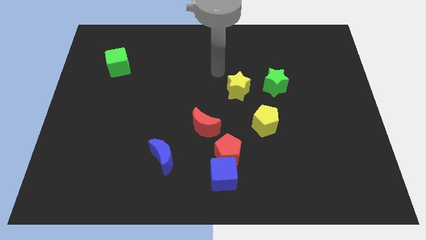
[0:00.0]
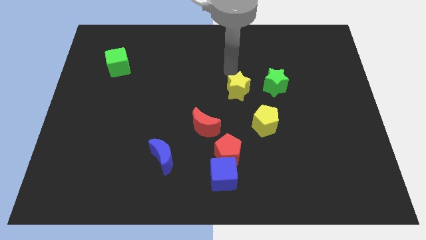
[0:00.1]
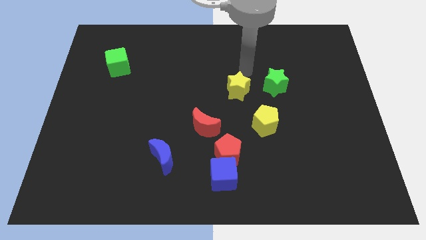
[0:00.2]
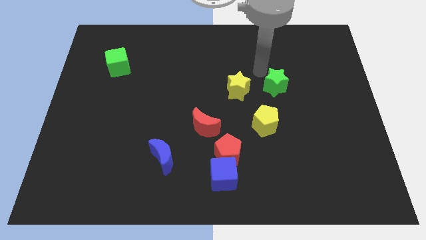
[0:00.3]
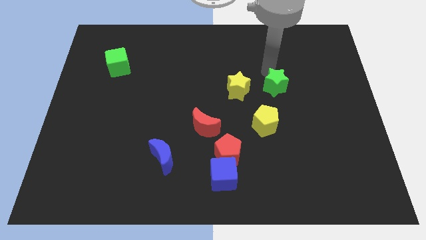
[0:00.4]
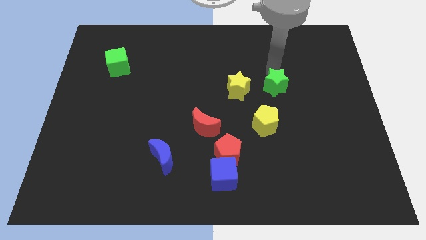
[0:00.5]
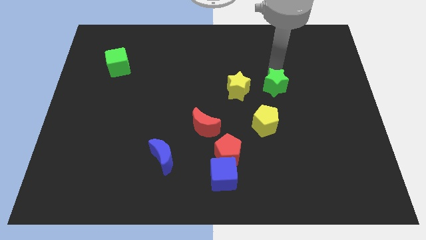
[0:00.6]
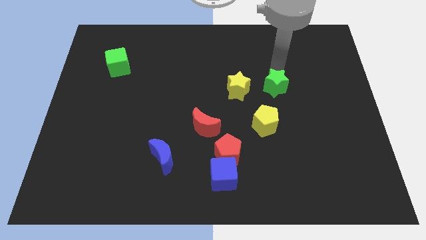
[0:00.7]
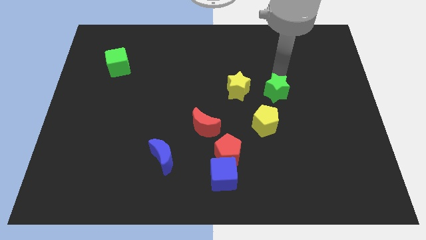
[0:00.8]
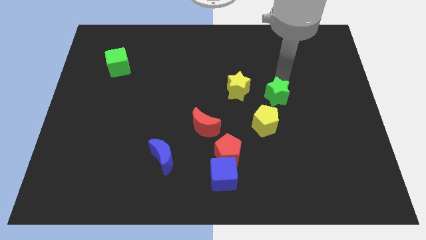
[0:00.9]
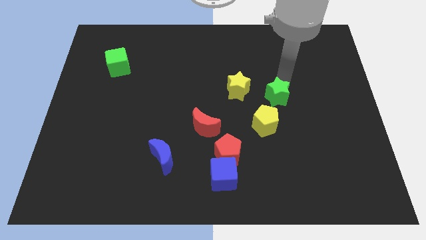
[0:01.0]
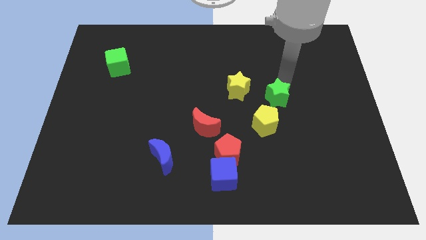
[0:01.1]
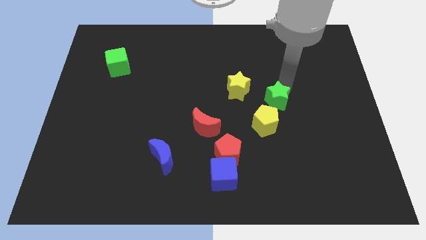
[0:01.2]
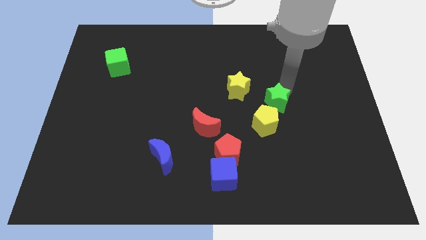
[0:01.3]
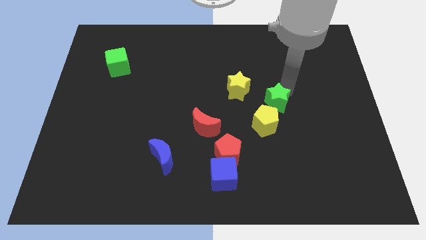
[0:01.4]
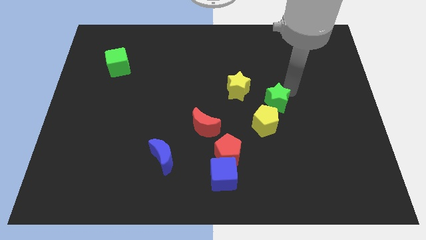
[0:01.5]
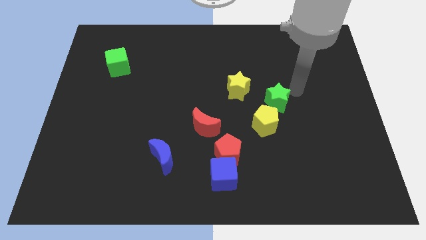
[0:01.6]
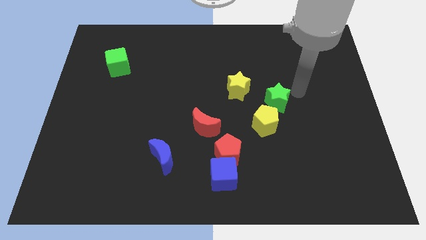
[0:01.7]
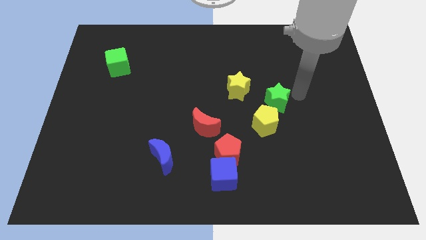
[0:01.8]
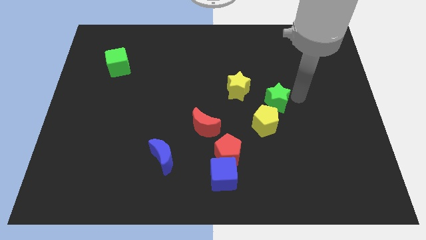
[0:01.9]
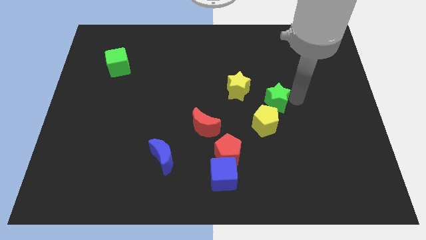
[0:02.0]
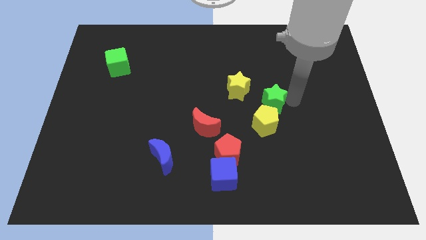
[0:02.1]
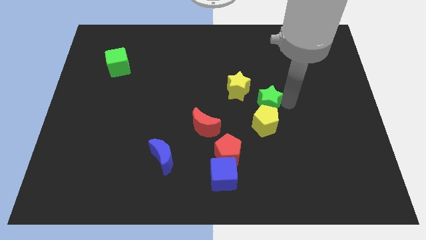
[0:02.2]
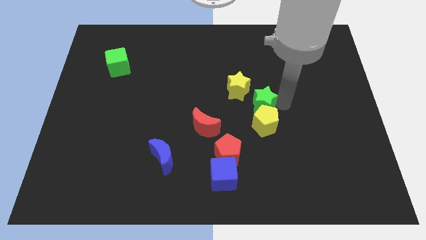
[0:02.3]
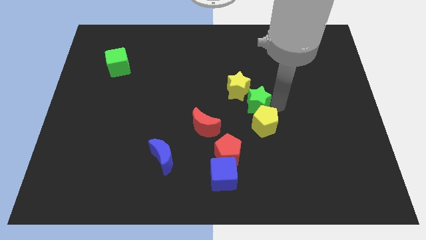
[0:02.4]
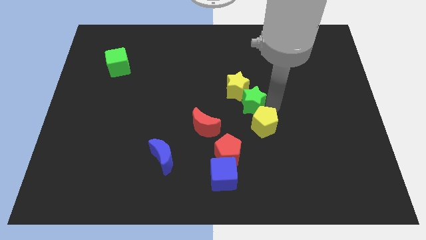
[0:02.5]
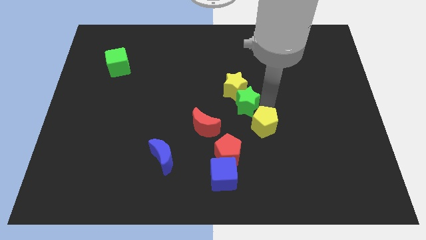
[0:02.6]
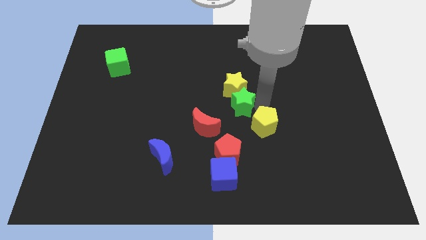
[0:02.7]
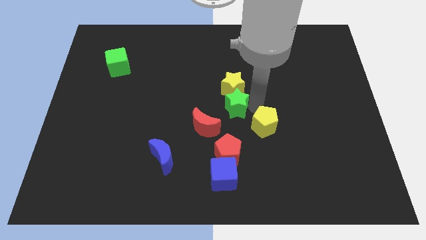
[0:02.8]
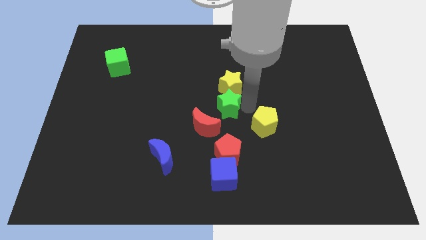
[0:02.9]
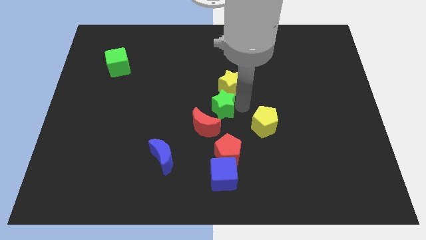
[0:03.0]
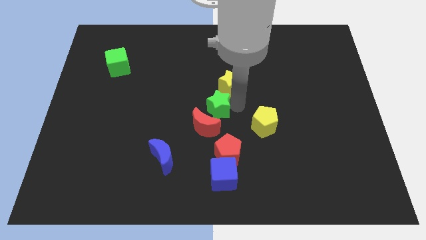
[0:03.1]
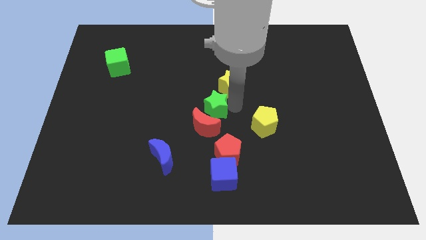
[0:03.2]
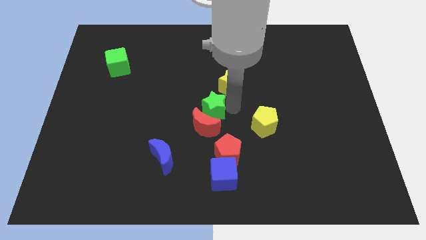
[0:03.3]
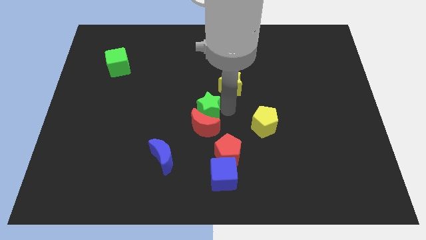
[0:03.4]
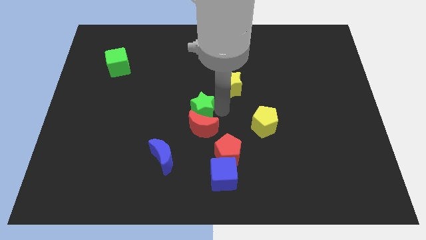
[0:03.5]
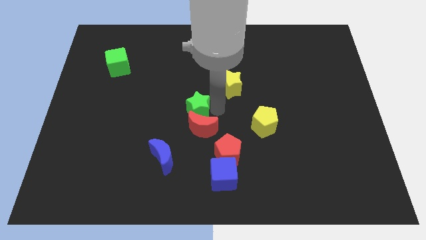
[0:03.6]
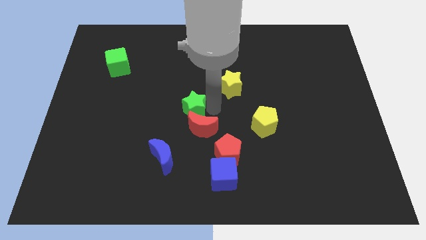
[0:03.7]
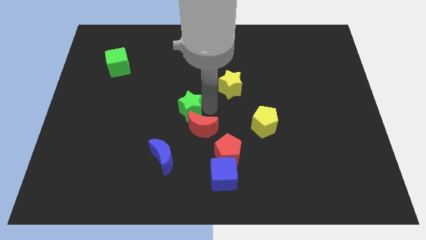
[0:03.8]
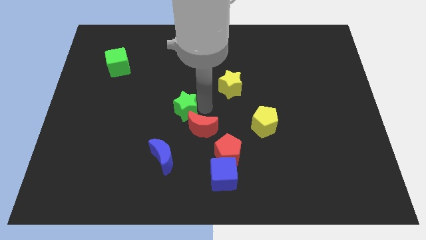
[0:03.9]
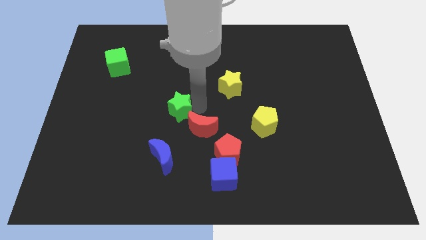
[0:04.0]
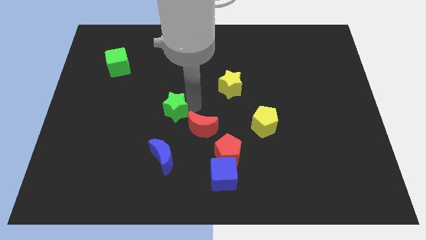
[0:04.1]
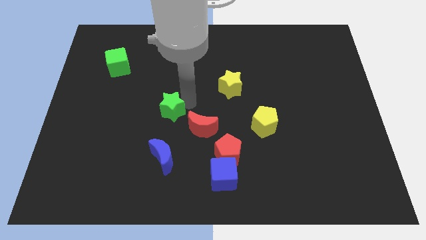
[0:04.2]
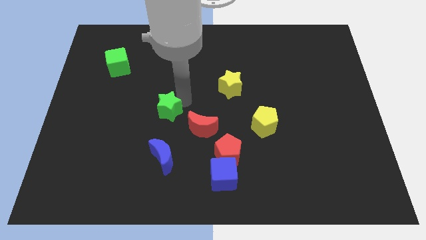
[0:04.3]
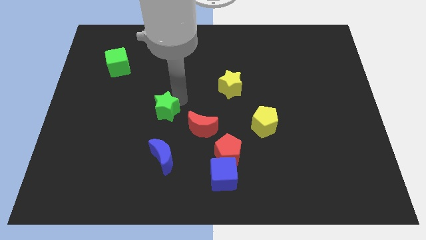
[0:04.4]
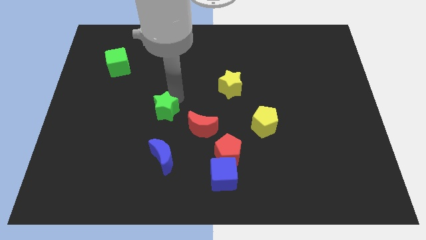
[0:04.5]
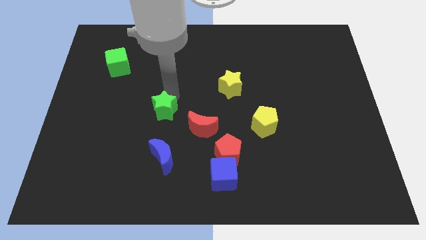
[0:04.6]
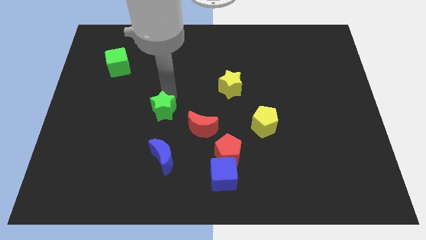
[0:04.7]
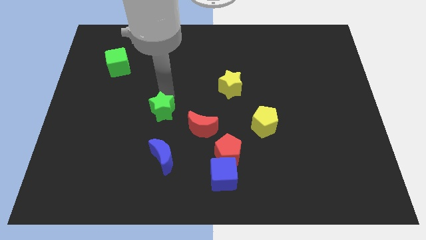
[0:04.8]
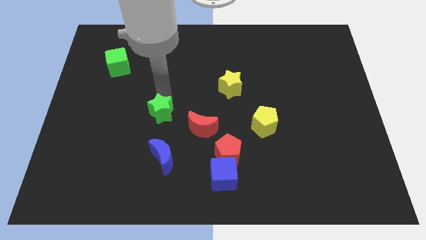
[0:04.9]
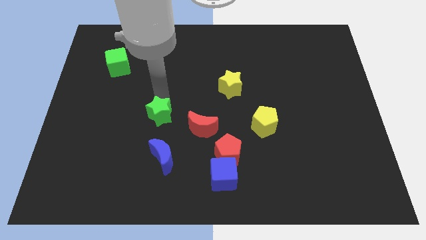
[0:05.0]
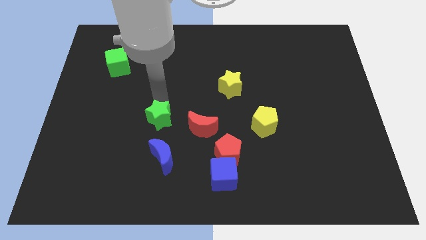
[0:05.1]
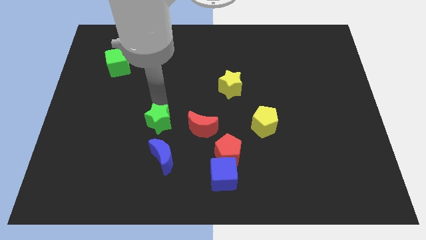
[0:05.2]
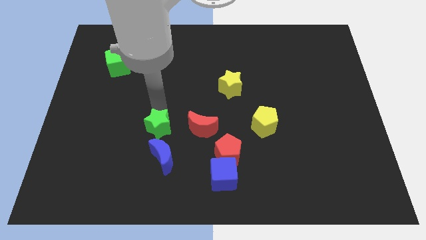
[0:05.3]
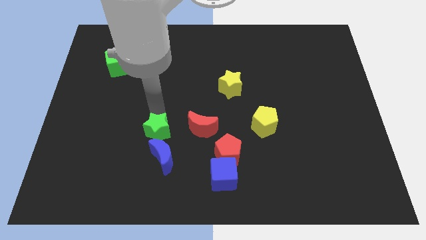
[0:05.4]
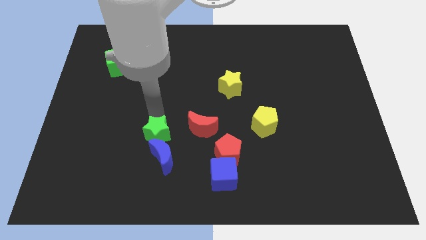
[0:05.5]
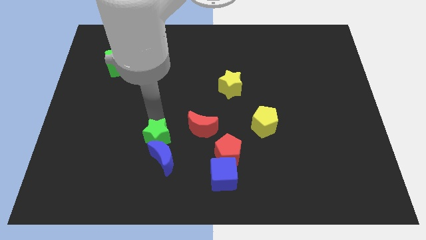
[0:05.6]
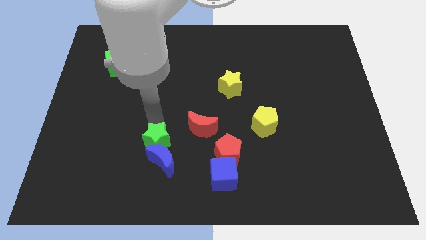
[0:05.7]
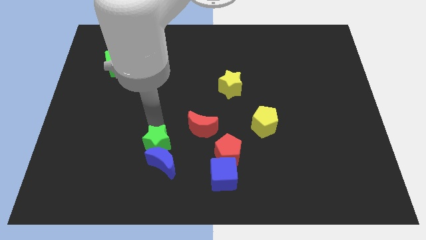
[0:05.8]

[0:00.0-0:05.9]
slide the green star close to the blue moon

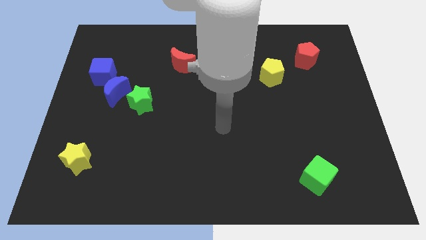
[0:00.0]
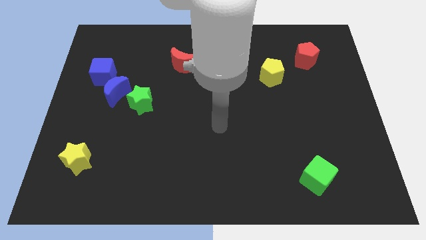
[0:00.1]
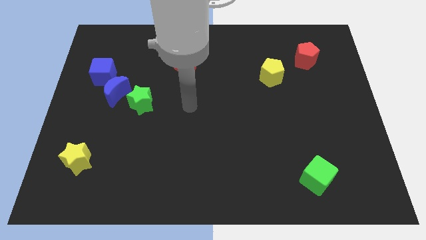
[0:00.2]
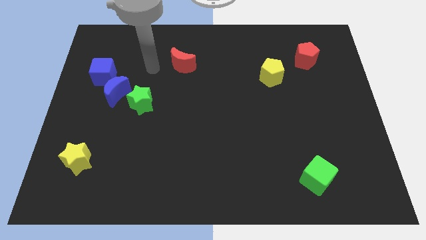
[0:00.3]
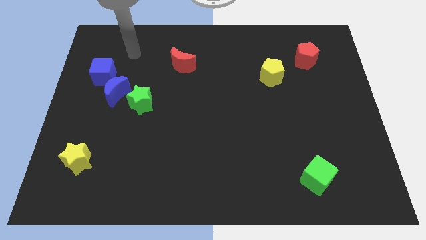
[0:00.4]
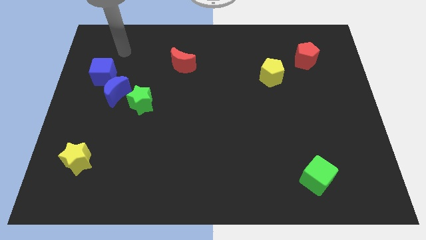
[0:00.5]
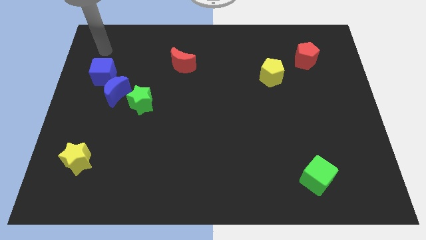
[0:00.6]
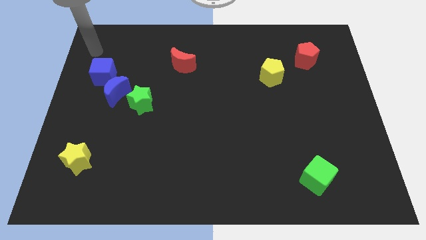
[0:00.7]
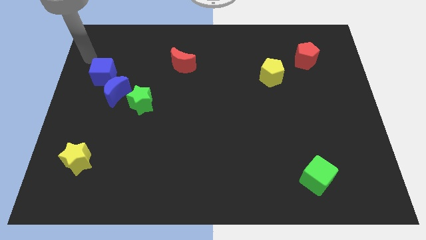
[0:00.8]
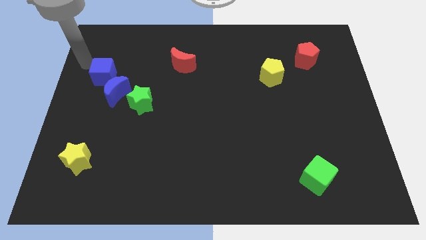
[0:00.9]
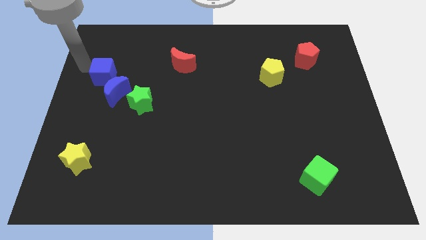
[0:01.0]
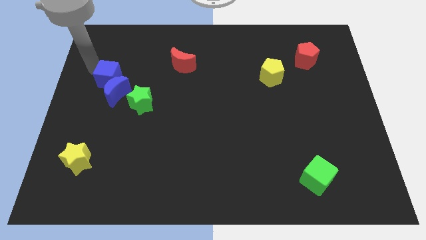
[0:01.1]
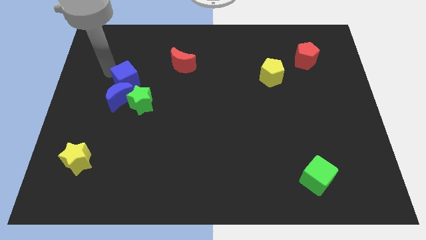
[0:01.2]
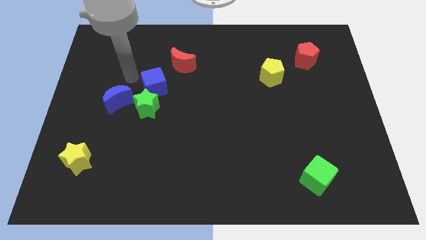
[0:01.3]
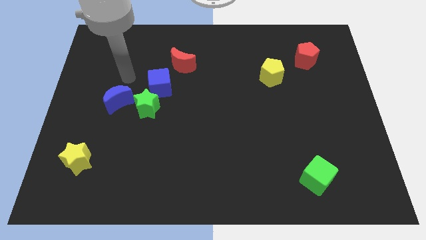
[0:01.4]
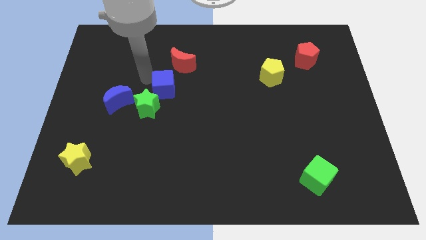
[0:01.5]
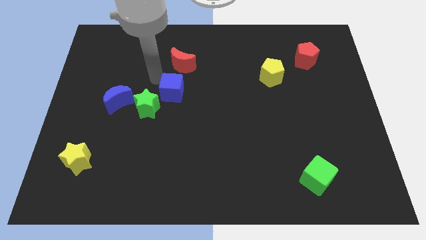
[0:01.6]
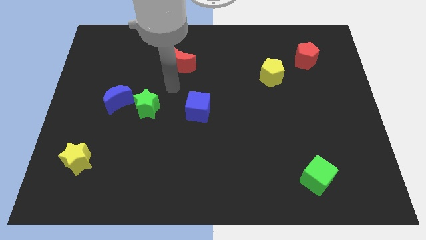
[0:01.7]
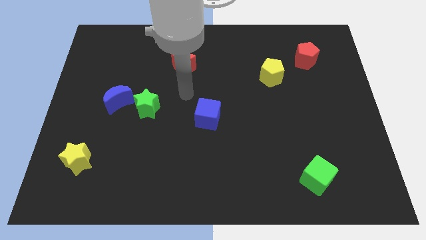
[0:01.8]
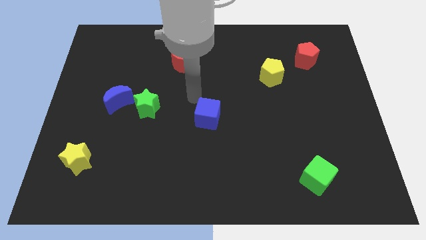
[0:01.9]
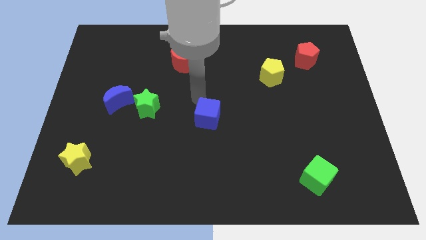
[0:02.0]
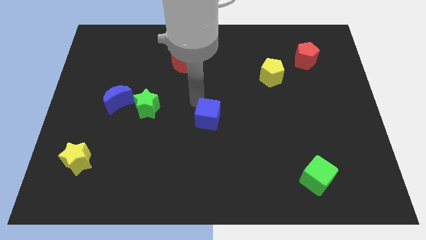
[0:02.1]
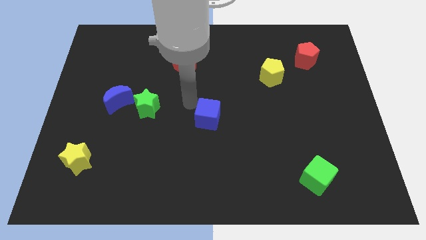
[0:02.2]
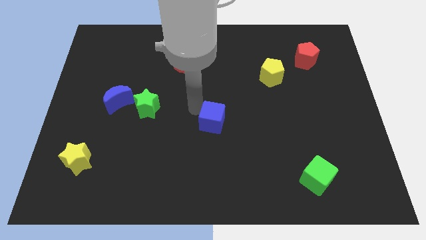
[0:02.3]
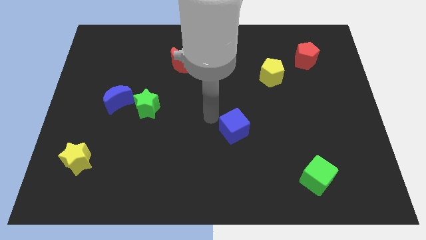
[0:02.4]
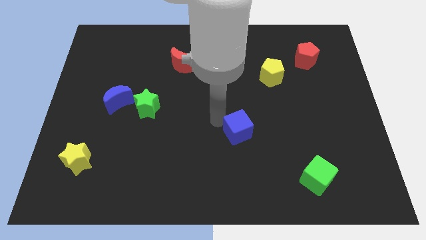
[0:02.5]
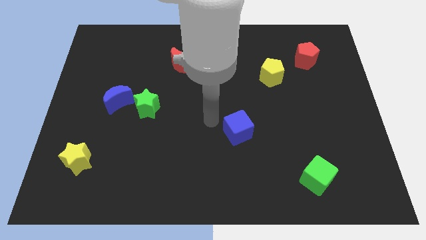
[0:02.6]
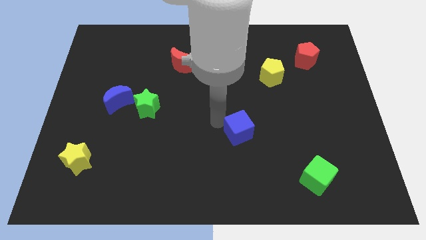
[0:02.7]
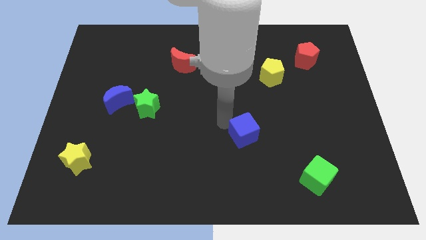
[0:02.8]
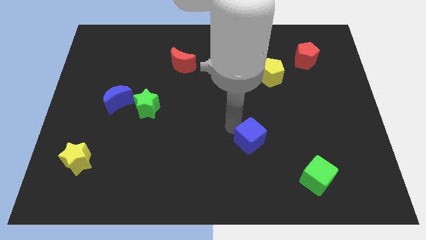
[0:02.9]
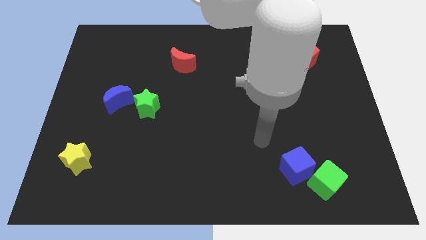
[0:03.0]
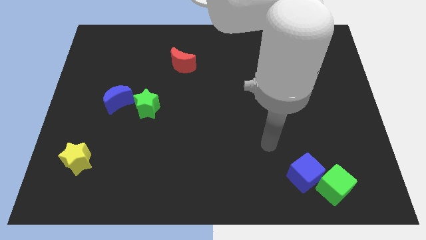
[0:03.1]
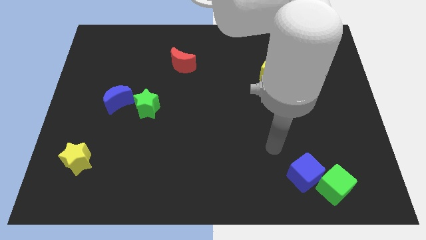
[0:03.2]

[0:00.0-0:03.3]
slide the blue cube to the green cube
